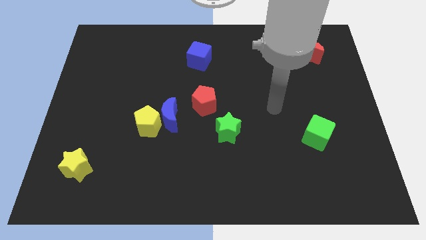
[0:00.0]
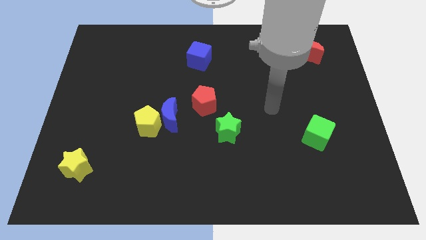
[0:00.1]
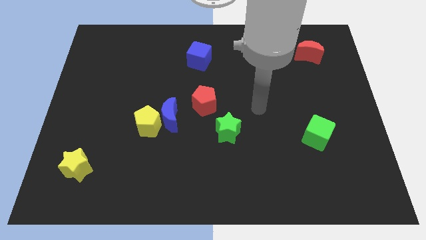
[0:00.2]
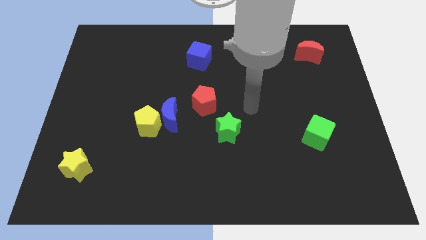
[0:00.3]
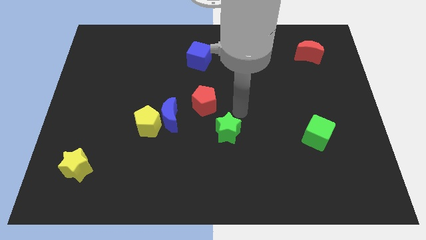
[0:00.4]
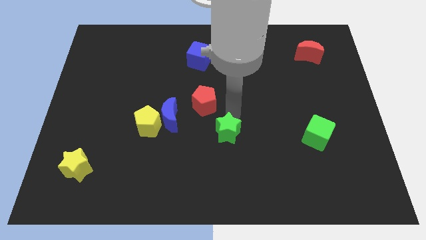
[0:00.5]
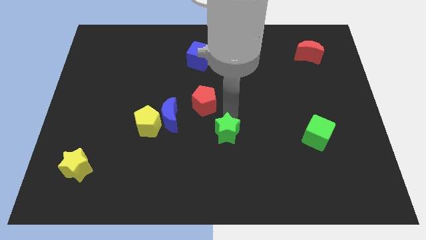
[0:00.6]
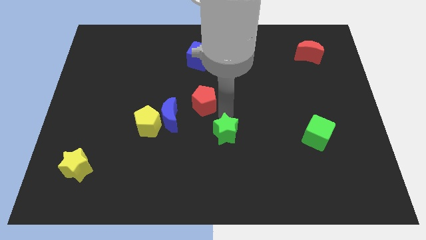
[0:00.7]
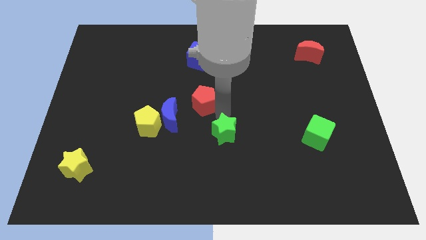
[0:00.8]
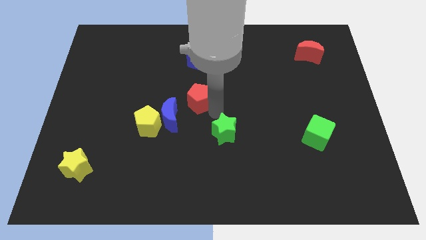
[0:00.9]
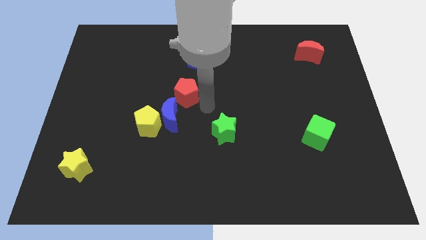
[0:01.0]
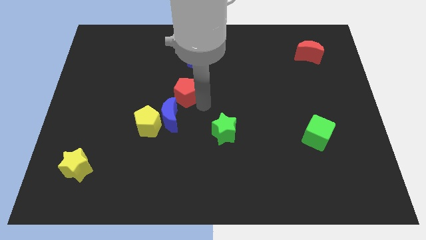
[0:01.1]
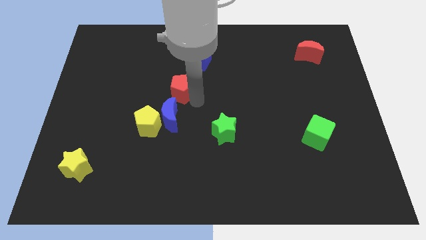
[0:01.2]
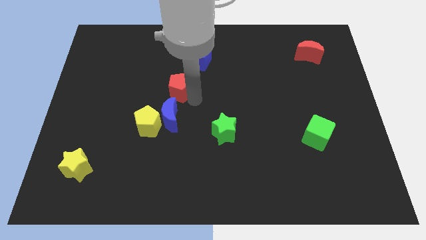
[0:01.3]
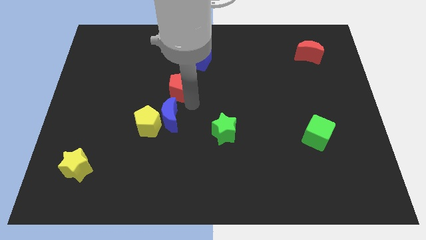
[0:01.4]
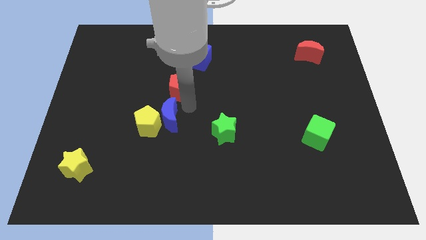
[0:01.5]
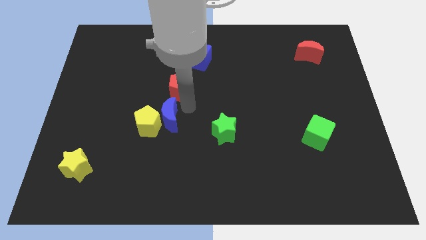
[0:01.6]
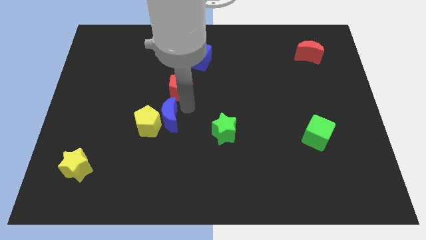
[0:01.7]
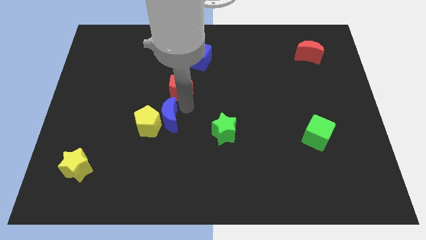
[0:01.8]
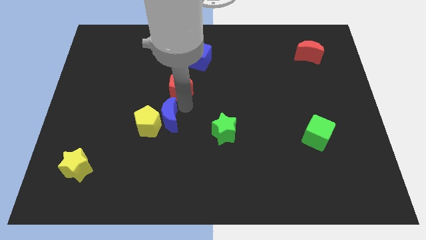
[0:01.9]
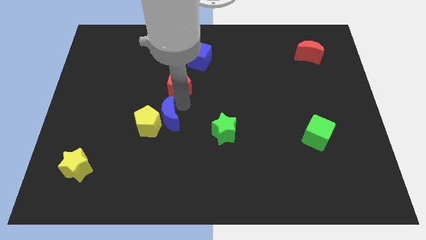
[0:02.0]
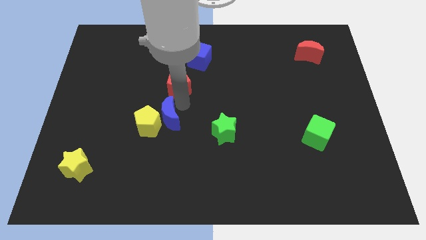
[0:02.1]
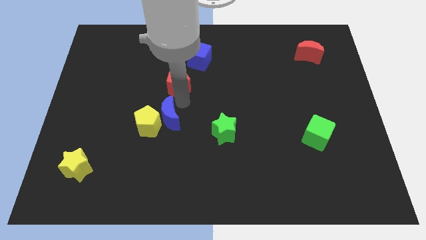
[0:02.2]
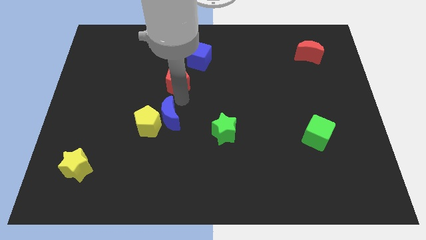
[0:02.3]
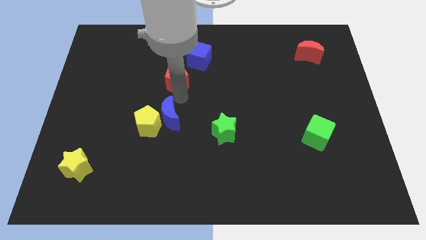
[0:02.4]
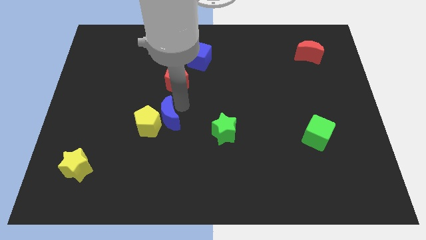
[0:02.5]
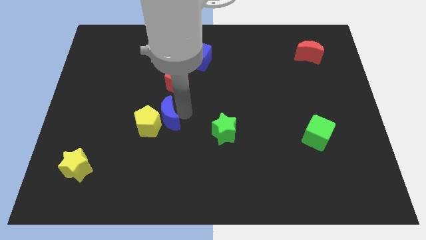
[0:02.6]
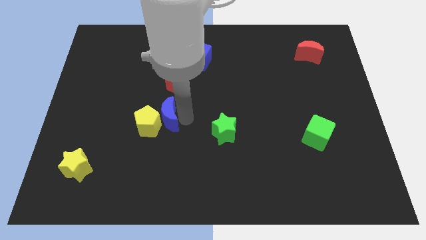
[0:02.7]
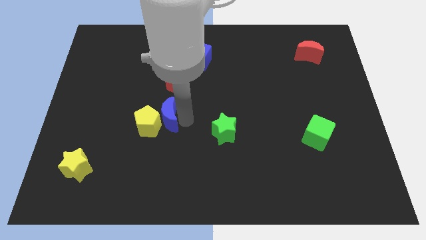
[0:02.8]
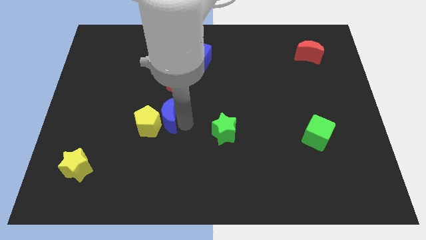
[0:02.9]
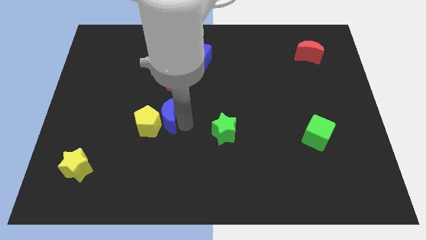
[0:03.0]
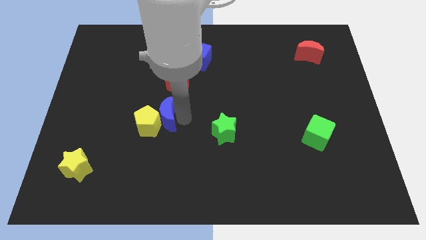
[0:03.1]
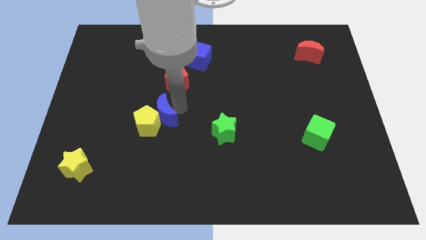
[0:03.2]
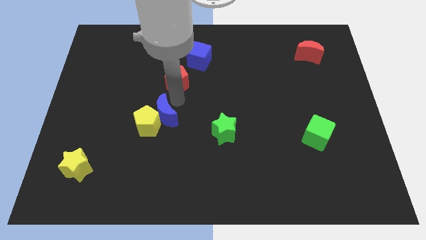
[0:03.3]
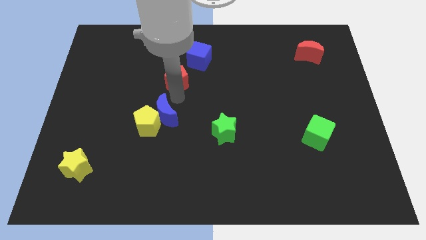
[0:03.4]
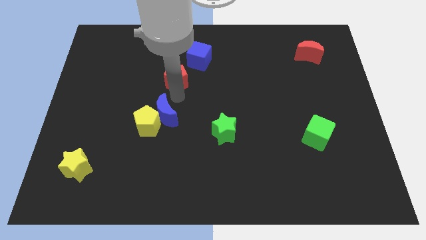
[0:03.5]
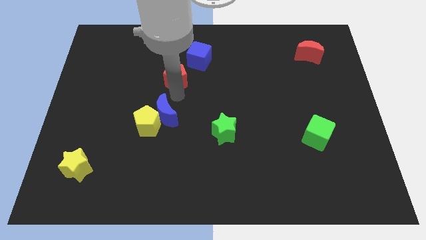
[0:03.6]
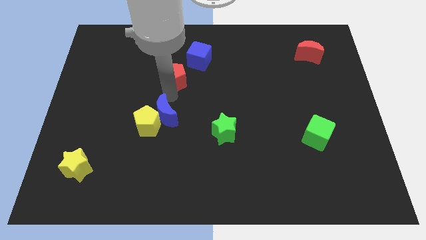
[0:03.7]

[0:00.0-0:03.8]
place the red pentagon diagonally in between the blue blocks

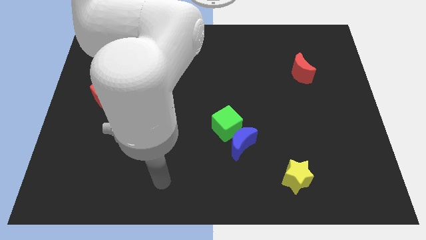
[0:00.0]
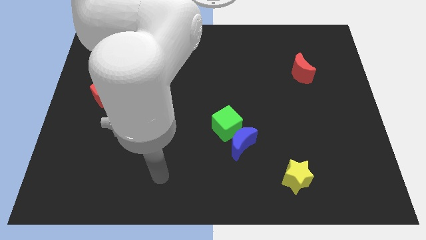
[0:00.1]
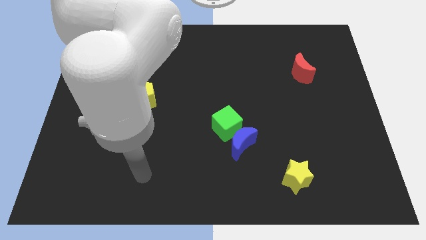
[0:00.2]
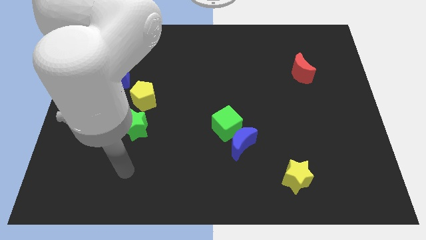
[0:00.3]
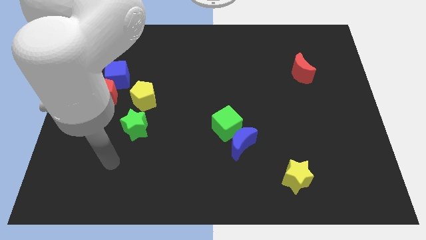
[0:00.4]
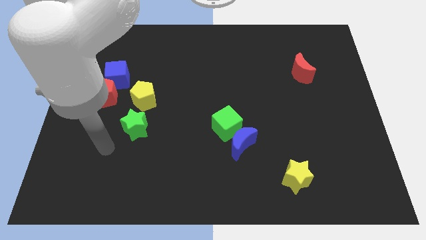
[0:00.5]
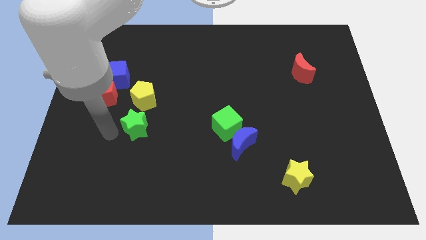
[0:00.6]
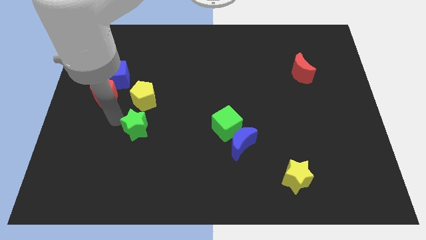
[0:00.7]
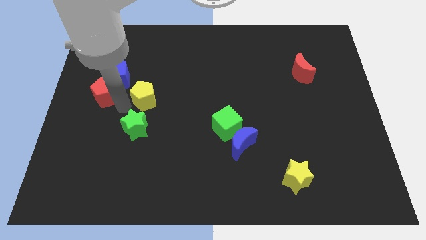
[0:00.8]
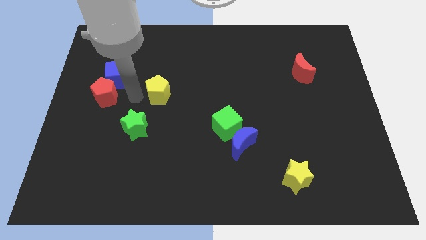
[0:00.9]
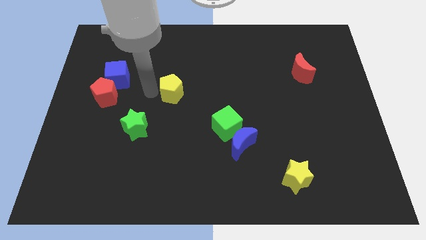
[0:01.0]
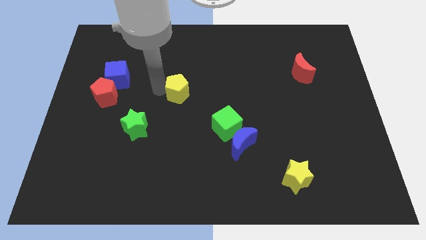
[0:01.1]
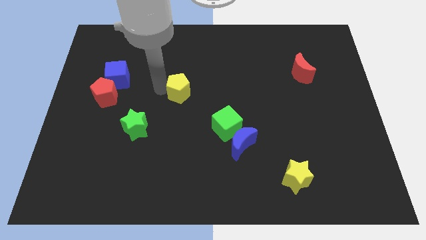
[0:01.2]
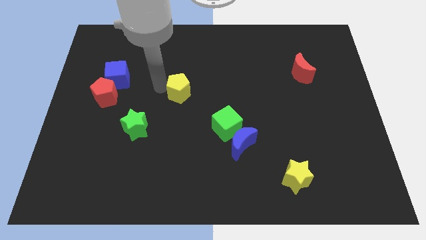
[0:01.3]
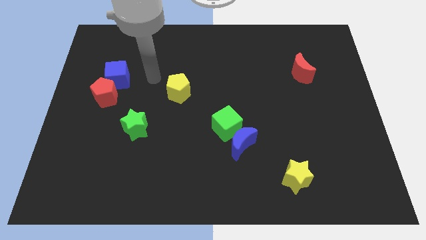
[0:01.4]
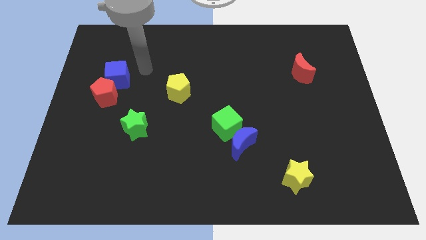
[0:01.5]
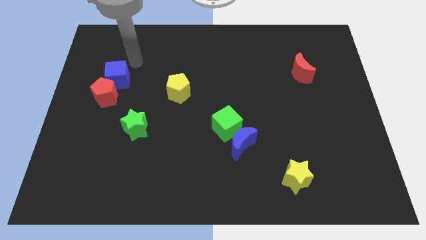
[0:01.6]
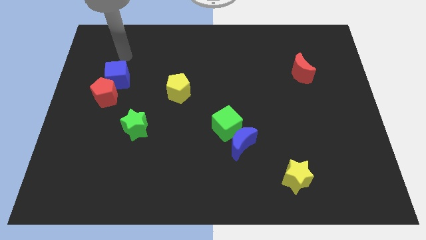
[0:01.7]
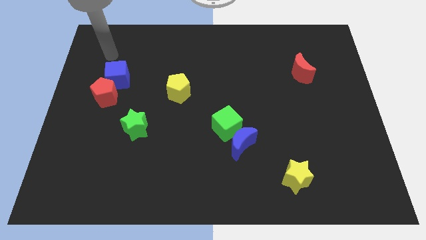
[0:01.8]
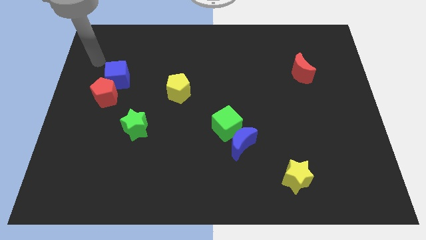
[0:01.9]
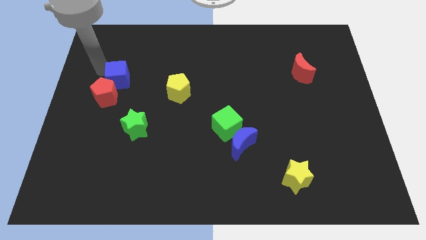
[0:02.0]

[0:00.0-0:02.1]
separate yellow pentagon from the green star

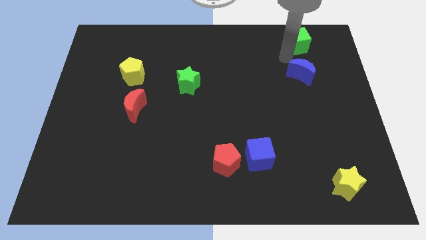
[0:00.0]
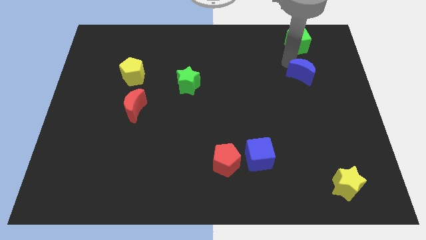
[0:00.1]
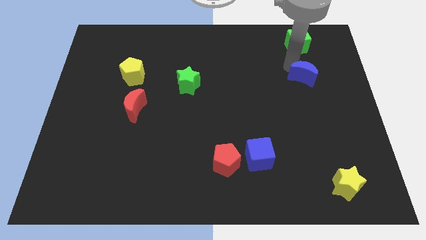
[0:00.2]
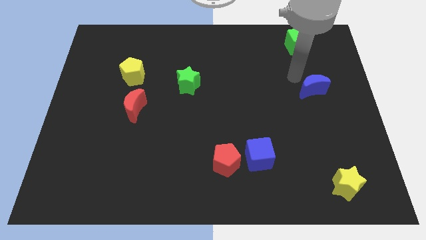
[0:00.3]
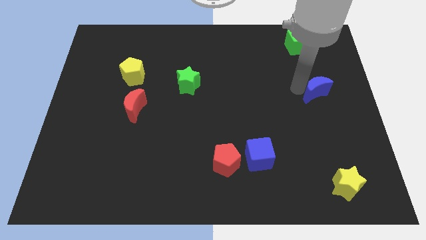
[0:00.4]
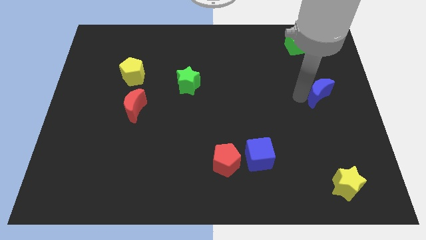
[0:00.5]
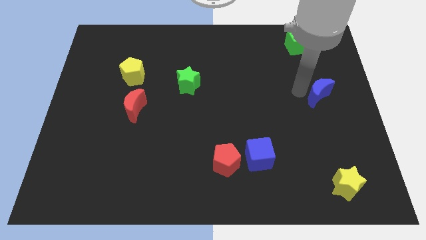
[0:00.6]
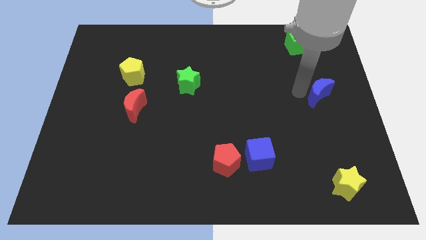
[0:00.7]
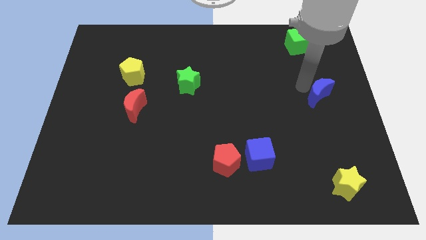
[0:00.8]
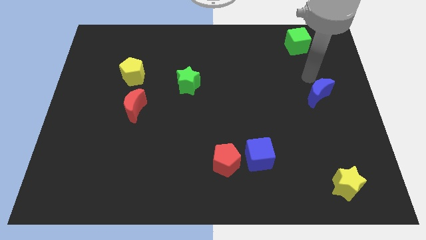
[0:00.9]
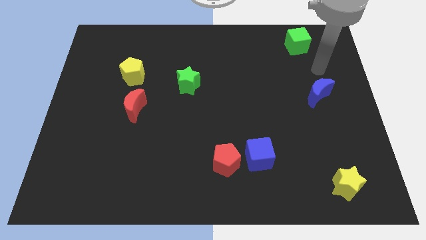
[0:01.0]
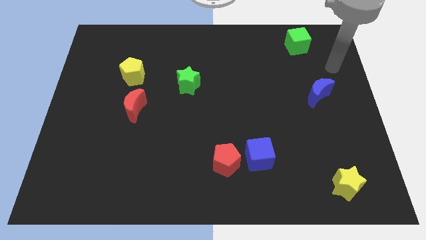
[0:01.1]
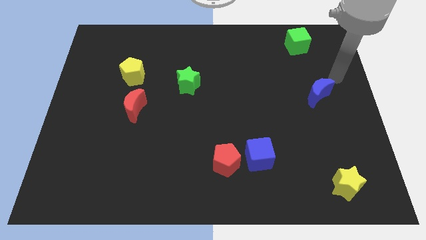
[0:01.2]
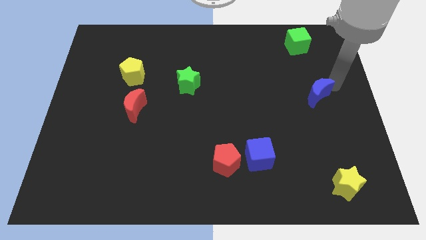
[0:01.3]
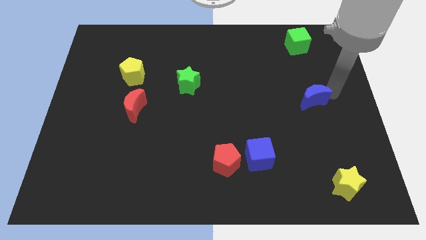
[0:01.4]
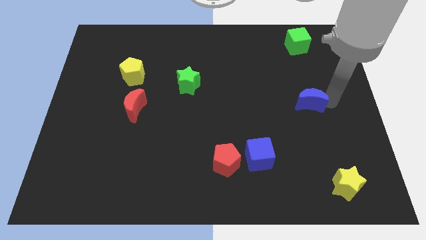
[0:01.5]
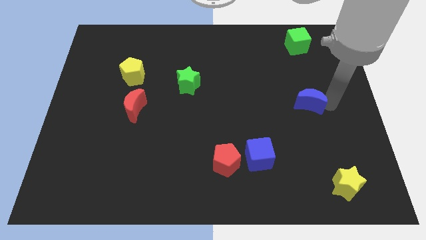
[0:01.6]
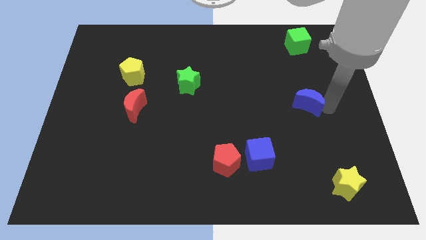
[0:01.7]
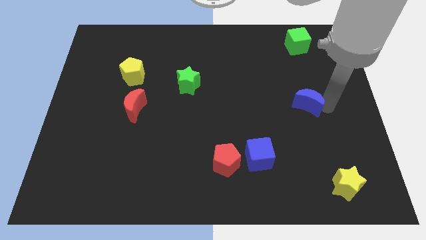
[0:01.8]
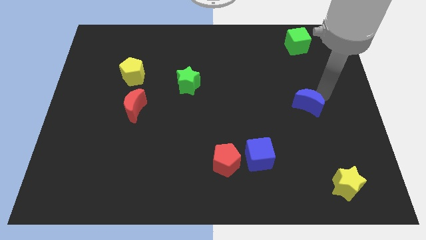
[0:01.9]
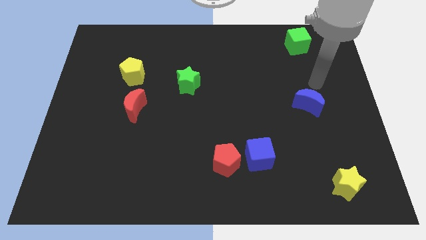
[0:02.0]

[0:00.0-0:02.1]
move the blue moon apart from the green cube

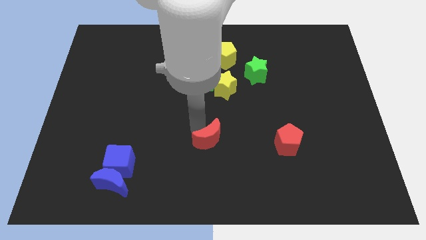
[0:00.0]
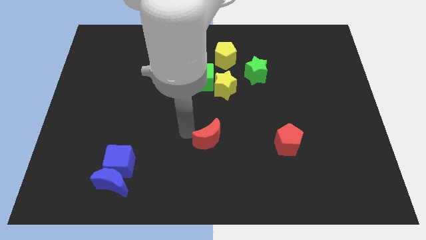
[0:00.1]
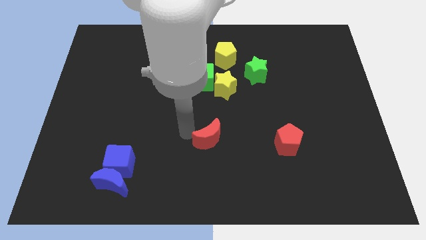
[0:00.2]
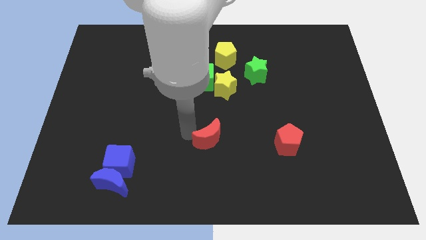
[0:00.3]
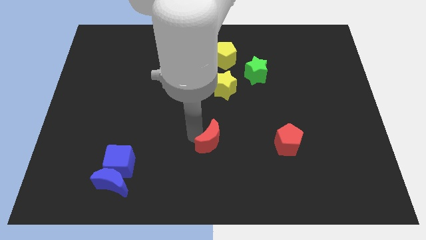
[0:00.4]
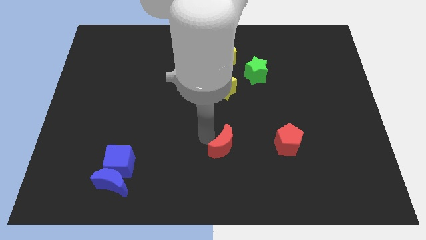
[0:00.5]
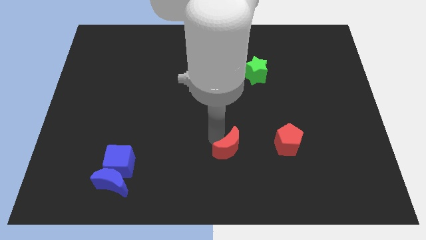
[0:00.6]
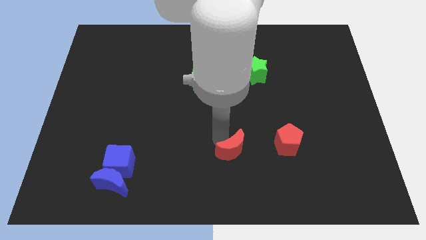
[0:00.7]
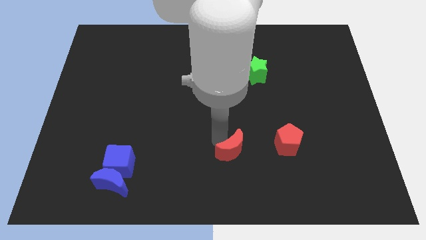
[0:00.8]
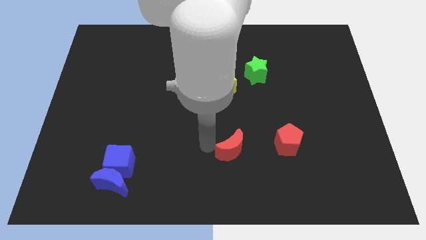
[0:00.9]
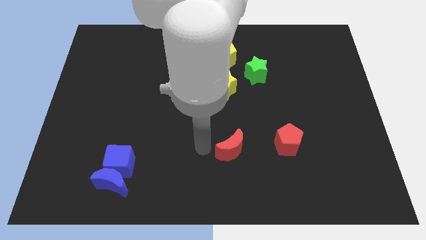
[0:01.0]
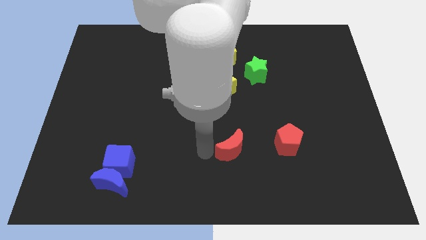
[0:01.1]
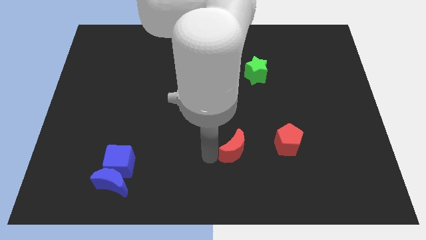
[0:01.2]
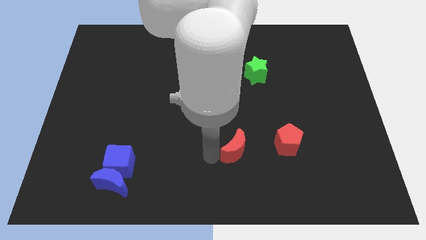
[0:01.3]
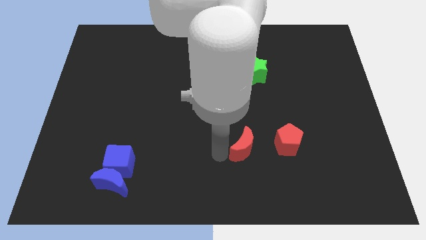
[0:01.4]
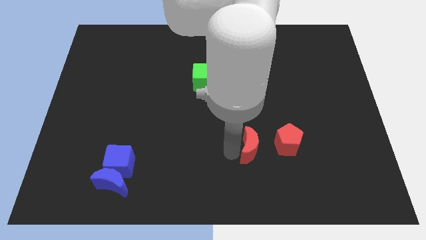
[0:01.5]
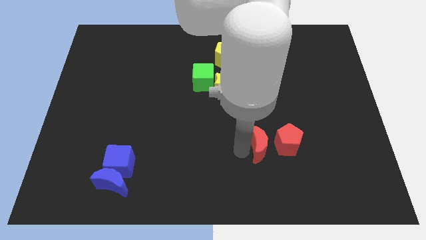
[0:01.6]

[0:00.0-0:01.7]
place the red crescent parallel to red pentagon
